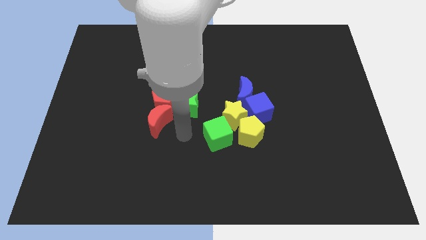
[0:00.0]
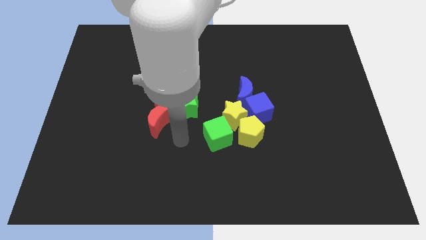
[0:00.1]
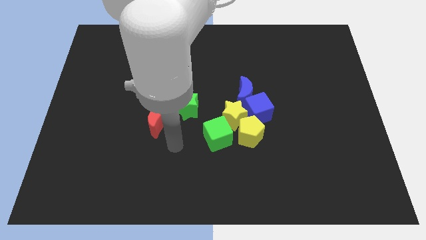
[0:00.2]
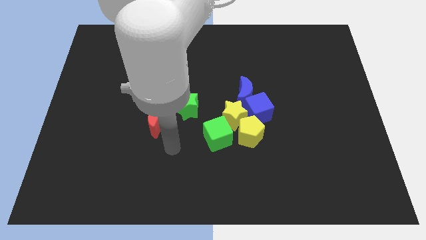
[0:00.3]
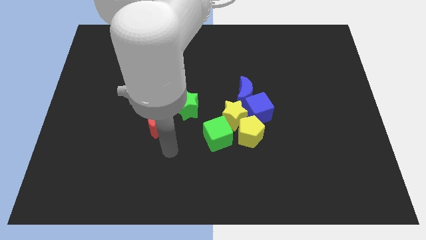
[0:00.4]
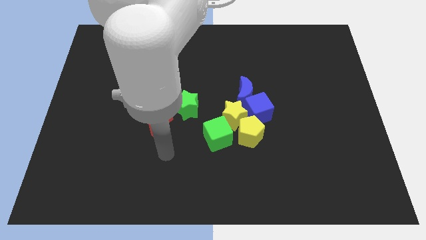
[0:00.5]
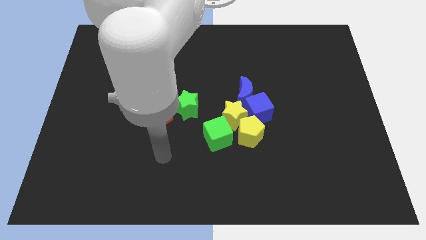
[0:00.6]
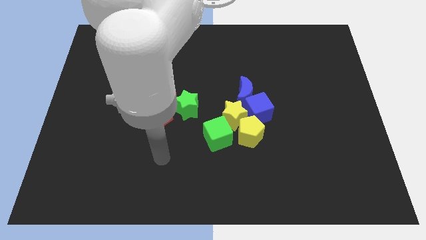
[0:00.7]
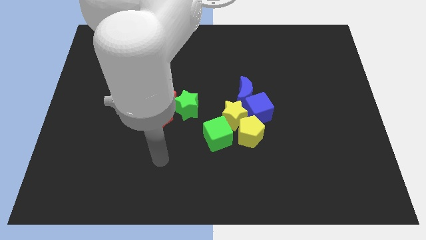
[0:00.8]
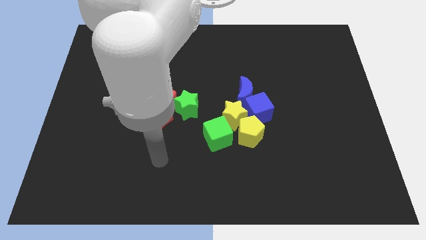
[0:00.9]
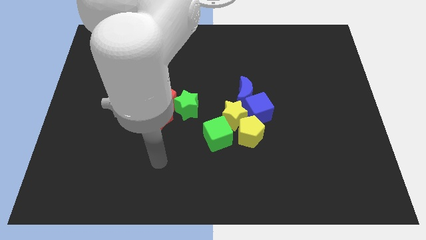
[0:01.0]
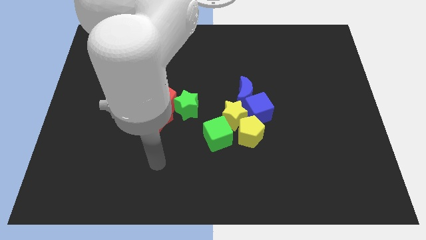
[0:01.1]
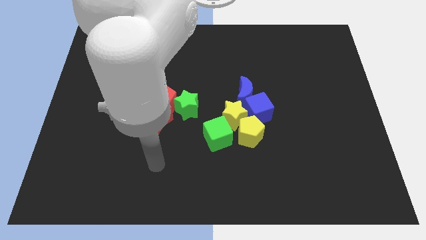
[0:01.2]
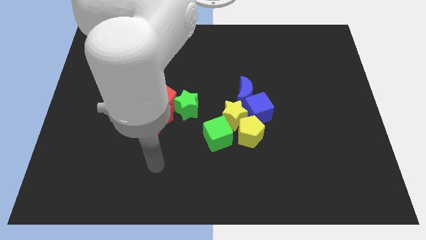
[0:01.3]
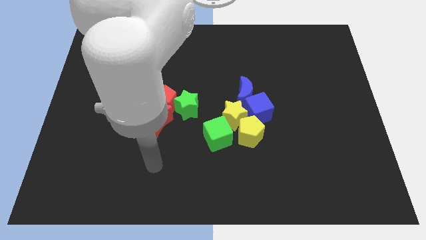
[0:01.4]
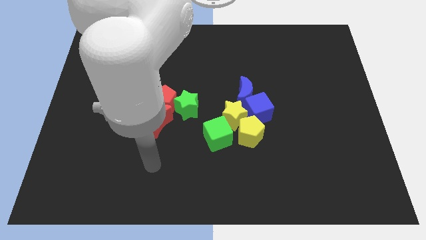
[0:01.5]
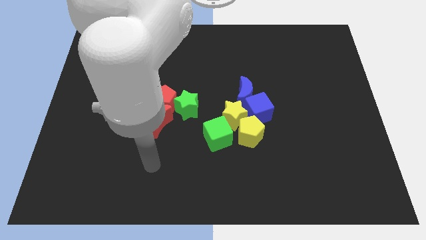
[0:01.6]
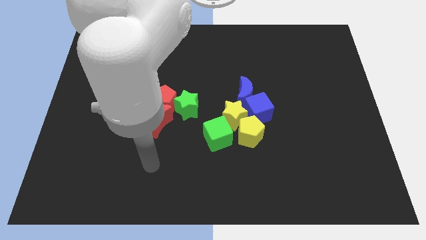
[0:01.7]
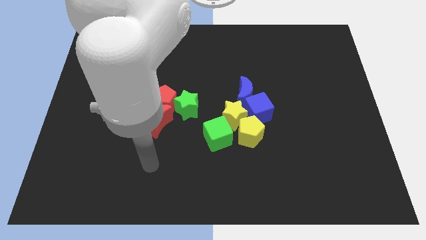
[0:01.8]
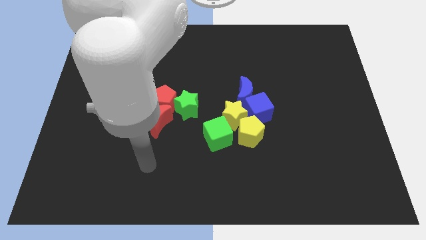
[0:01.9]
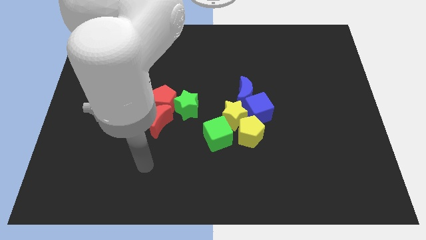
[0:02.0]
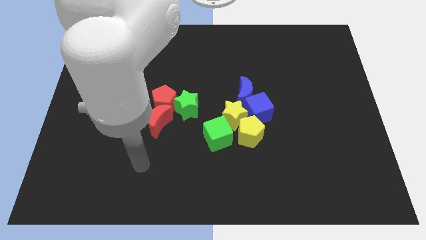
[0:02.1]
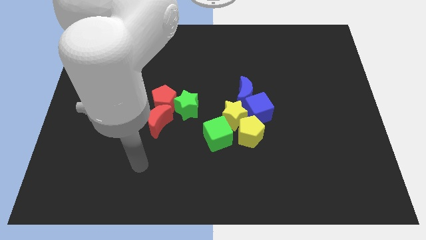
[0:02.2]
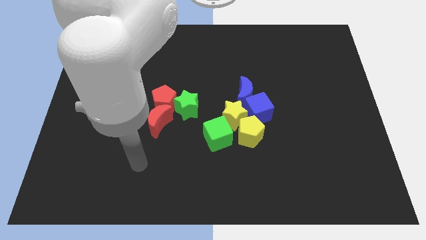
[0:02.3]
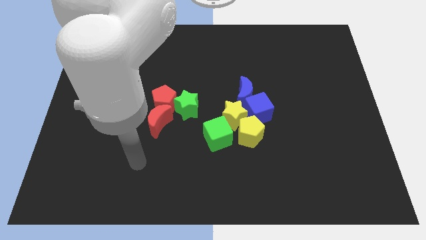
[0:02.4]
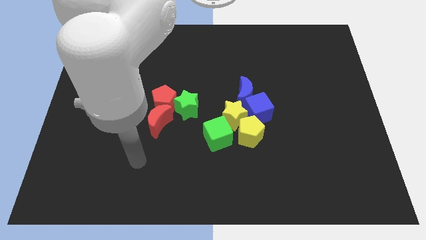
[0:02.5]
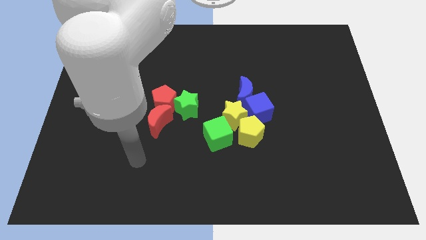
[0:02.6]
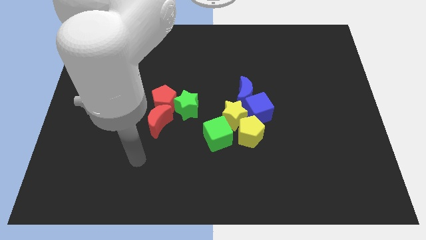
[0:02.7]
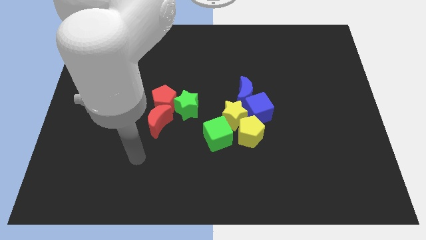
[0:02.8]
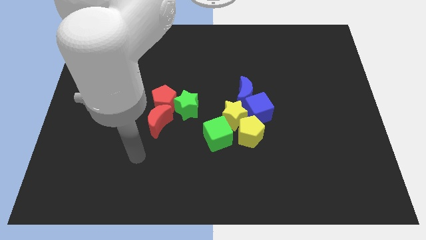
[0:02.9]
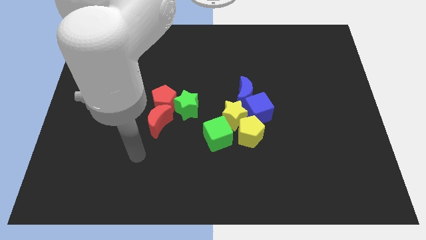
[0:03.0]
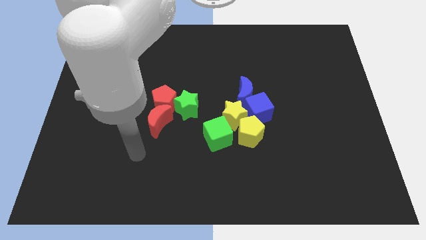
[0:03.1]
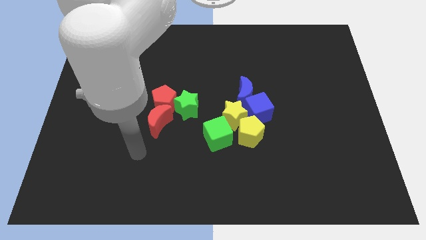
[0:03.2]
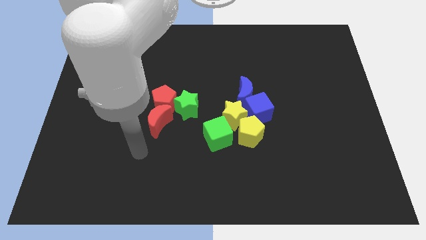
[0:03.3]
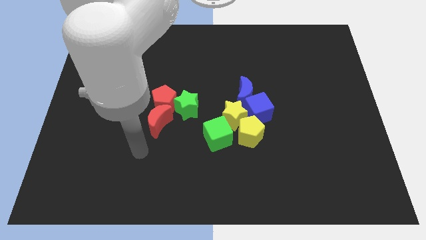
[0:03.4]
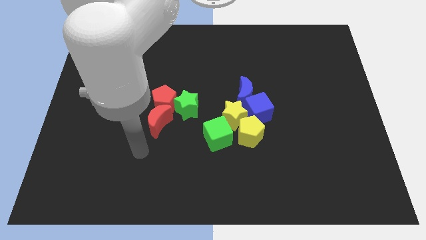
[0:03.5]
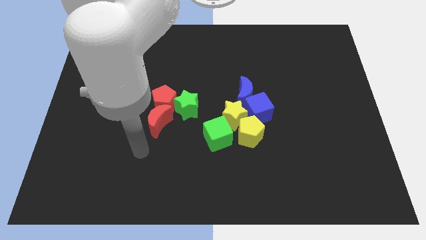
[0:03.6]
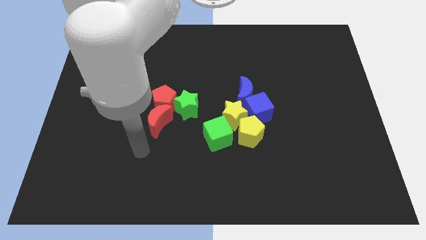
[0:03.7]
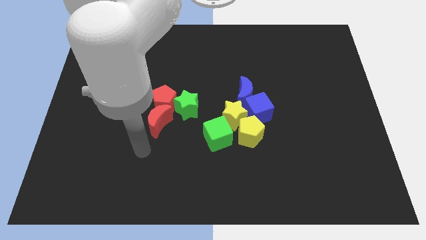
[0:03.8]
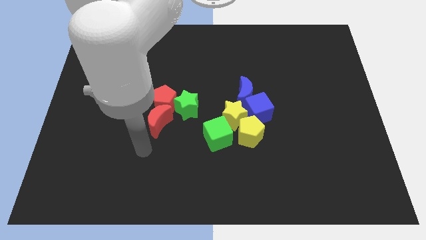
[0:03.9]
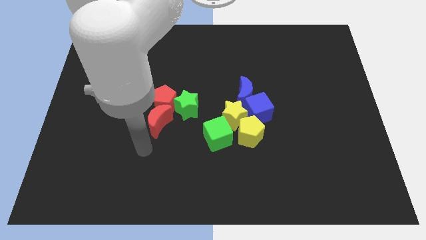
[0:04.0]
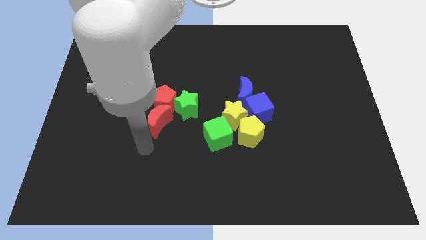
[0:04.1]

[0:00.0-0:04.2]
place your arm at the left side of the green cube

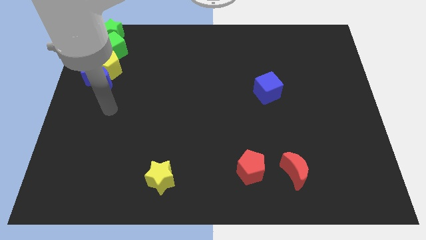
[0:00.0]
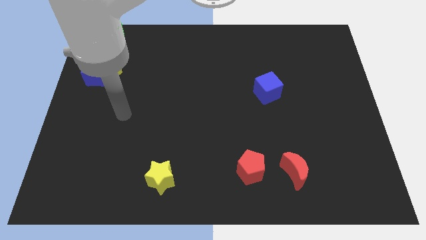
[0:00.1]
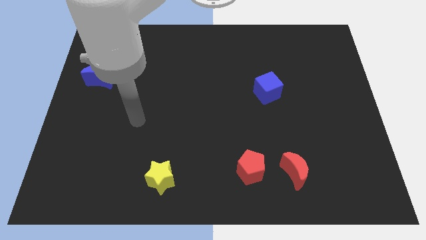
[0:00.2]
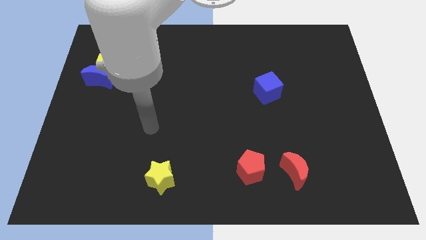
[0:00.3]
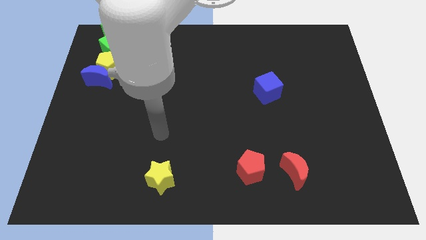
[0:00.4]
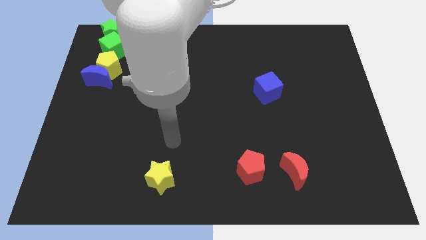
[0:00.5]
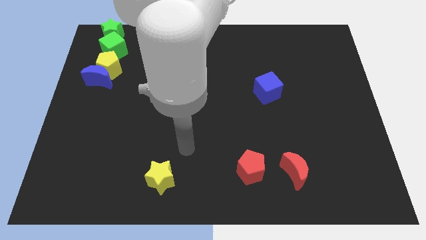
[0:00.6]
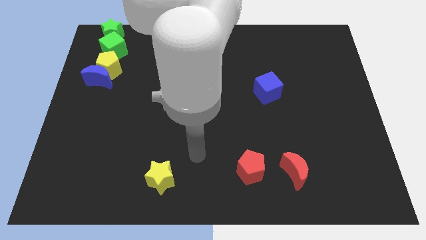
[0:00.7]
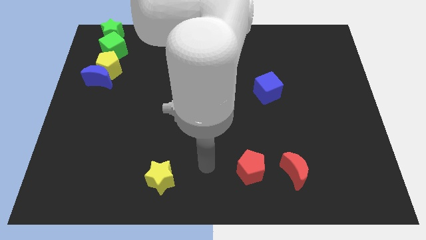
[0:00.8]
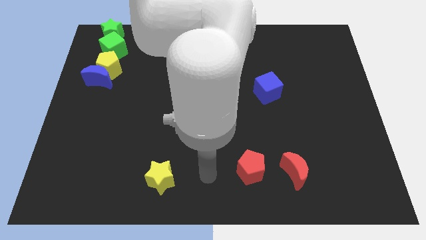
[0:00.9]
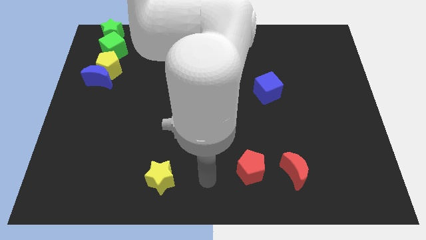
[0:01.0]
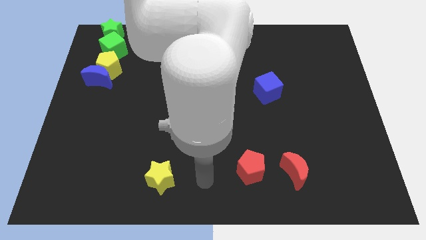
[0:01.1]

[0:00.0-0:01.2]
put arm in between red pentagon and yellow star

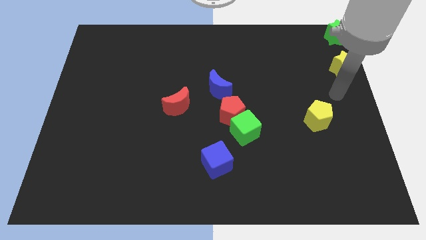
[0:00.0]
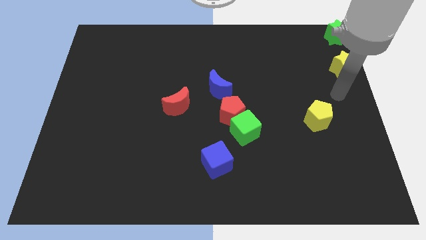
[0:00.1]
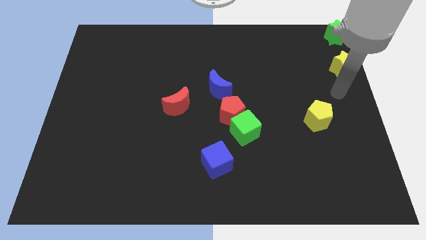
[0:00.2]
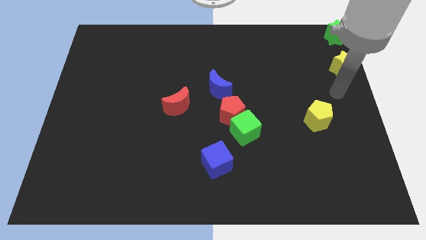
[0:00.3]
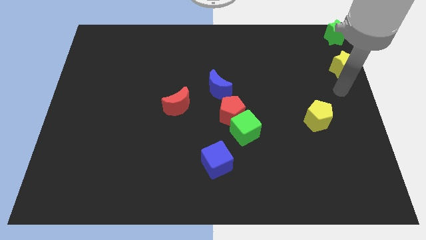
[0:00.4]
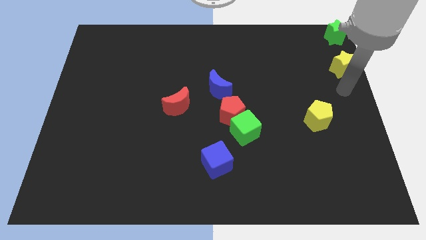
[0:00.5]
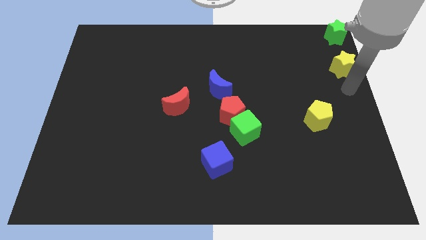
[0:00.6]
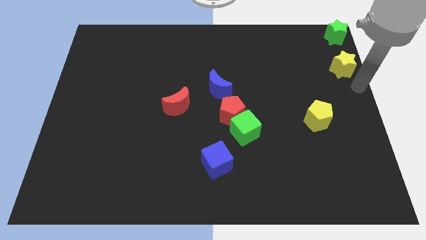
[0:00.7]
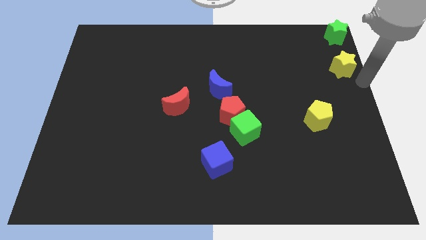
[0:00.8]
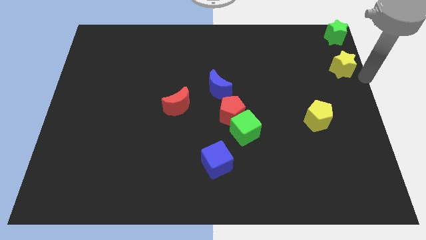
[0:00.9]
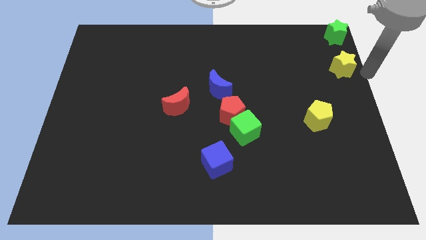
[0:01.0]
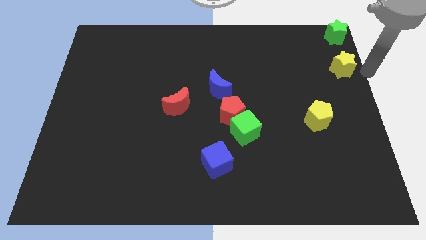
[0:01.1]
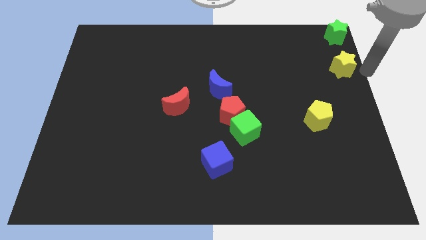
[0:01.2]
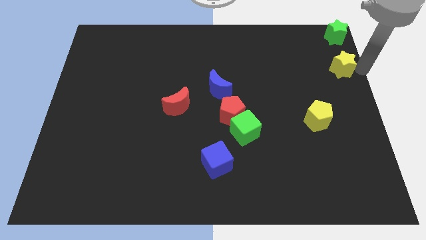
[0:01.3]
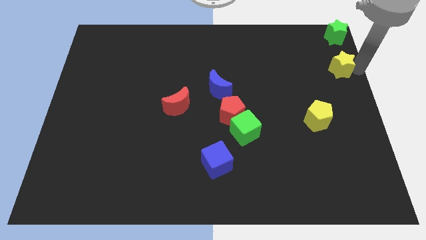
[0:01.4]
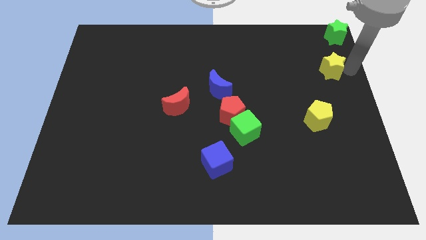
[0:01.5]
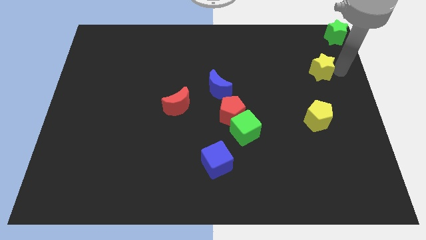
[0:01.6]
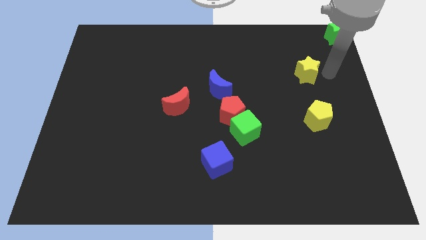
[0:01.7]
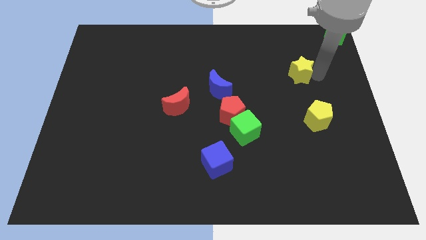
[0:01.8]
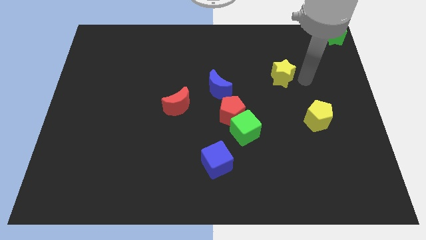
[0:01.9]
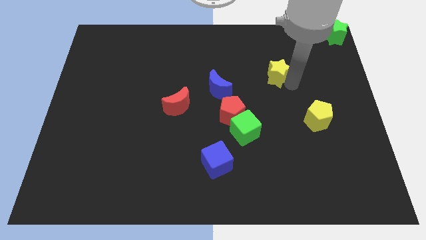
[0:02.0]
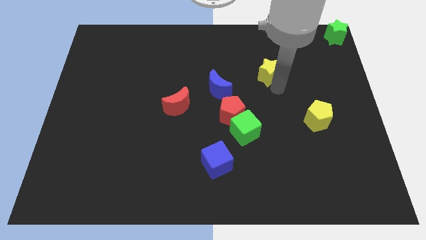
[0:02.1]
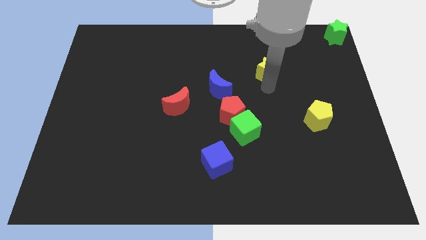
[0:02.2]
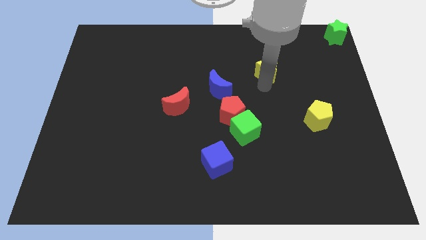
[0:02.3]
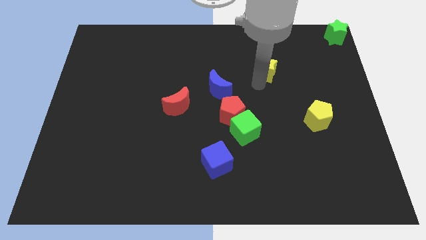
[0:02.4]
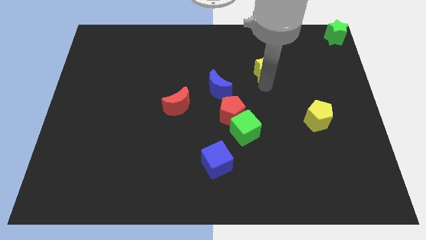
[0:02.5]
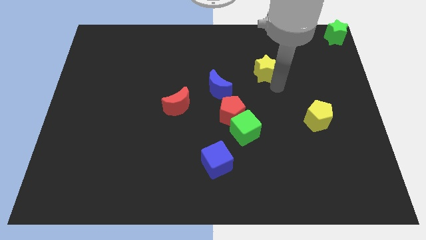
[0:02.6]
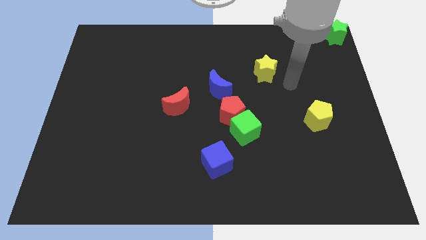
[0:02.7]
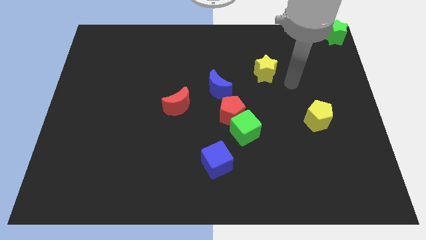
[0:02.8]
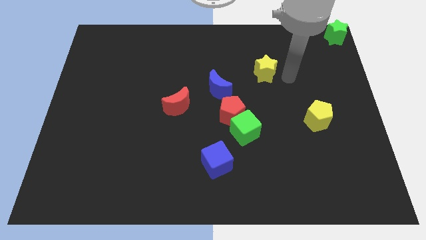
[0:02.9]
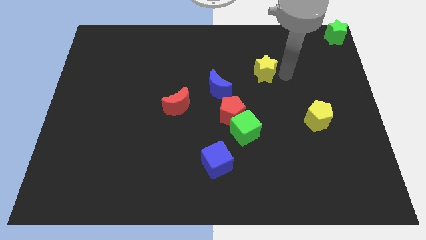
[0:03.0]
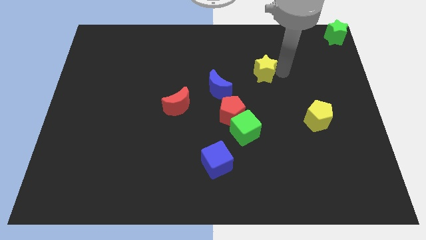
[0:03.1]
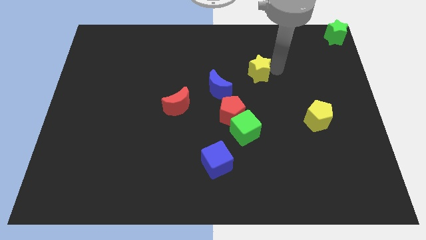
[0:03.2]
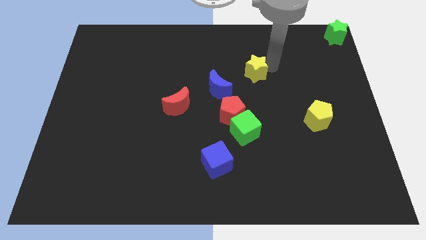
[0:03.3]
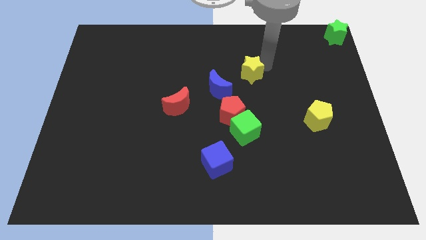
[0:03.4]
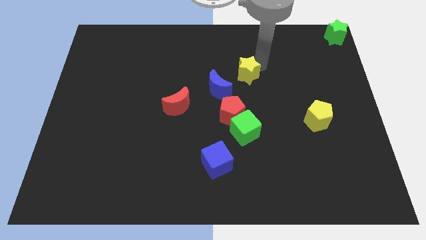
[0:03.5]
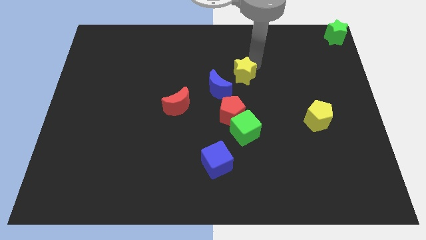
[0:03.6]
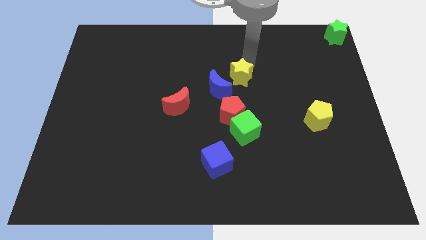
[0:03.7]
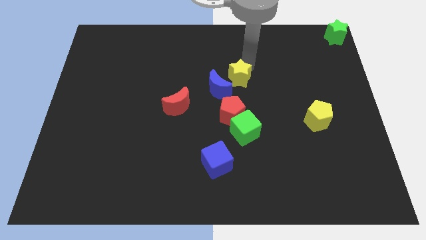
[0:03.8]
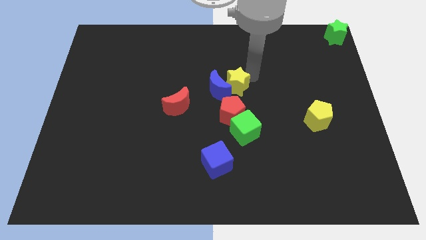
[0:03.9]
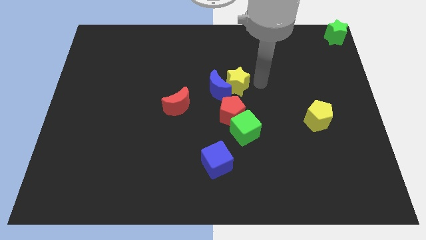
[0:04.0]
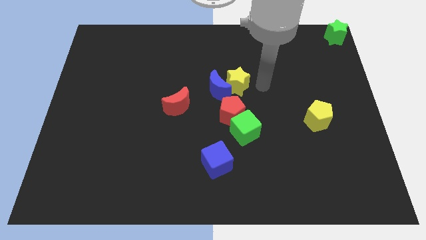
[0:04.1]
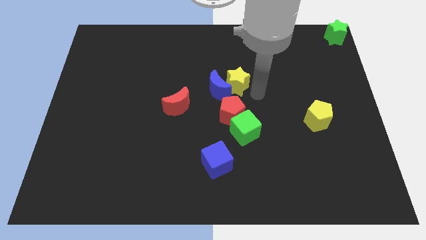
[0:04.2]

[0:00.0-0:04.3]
move the yellow star into the right side of the blue crescent
